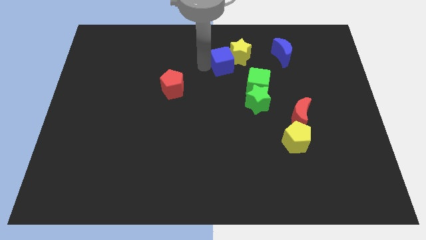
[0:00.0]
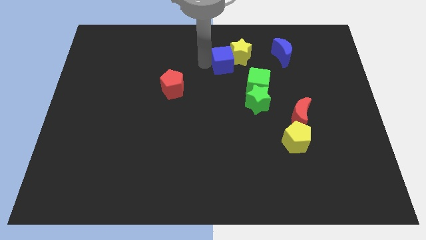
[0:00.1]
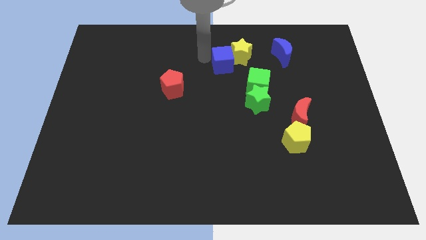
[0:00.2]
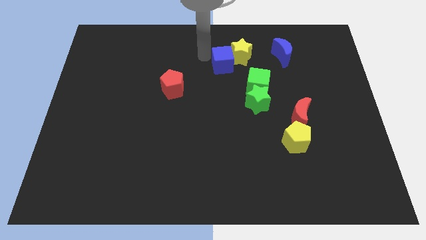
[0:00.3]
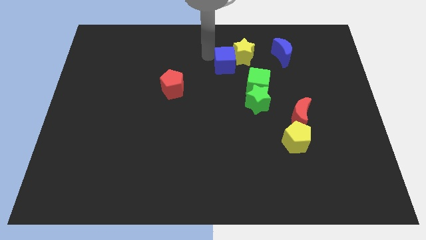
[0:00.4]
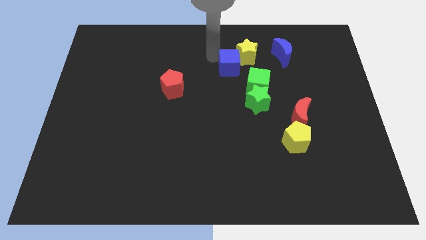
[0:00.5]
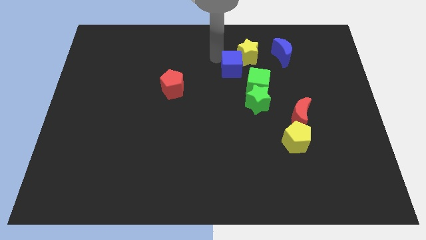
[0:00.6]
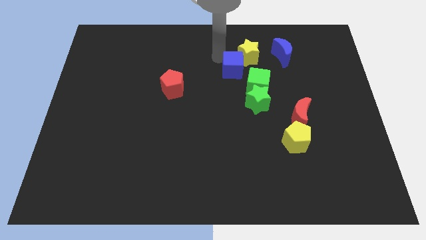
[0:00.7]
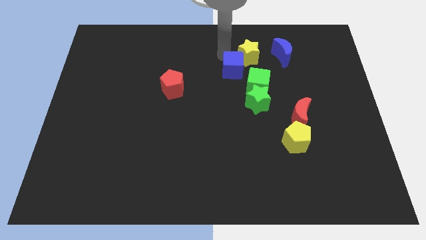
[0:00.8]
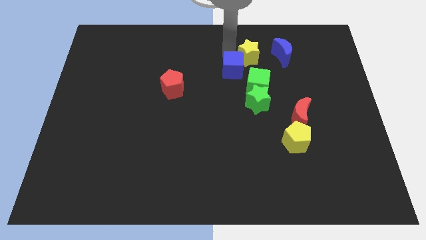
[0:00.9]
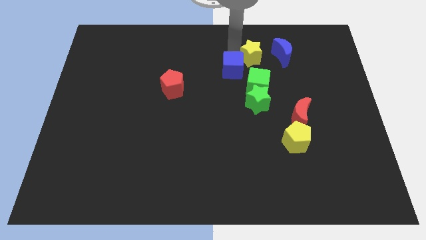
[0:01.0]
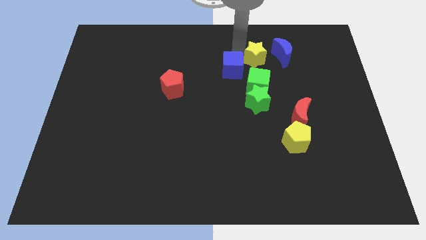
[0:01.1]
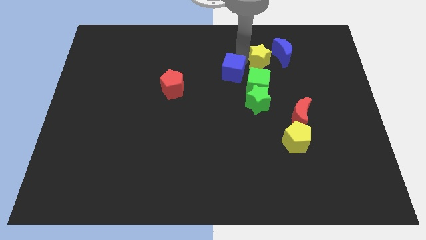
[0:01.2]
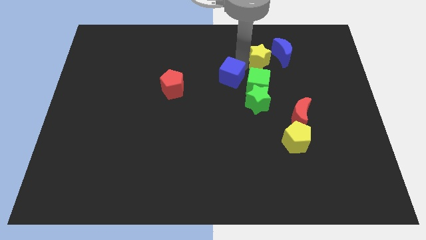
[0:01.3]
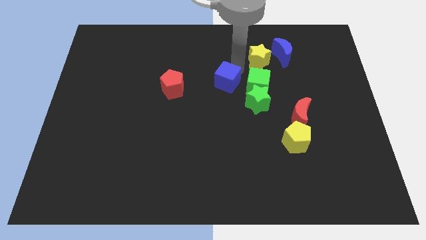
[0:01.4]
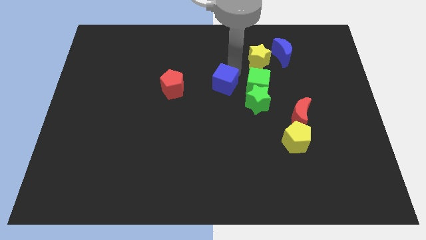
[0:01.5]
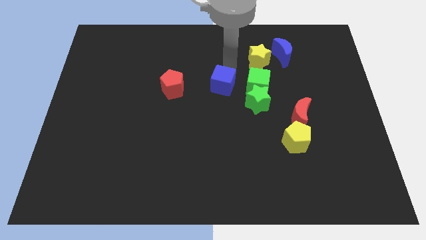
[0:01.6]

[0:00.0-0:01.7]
separate the blue cube from the yellow star

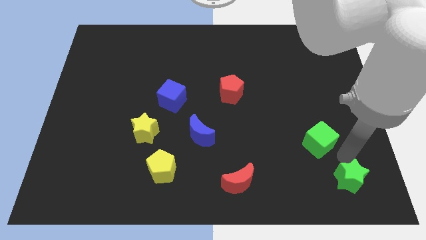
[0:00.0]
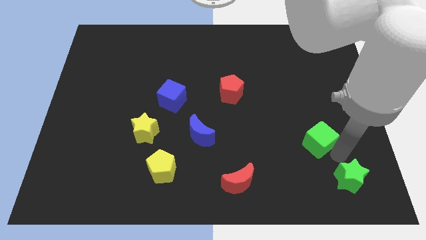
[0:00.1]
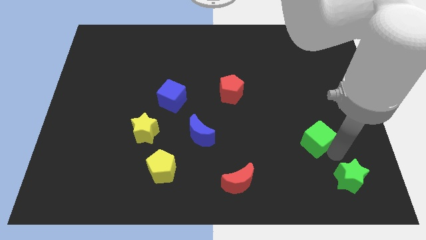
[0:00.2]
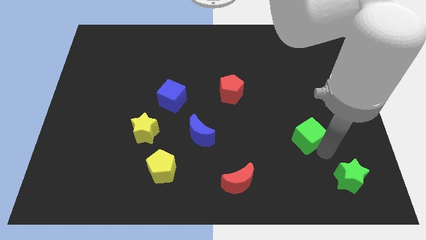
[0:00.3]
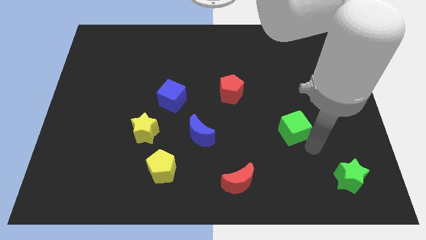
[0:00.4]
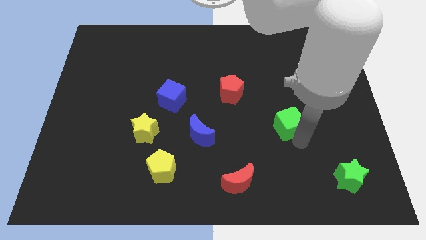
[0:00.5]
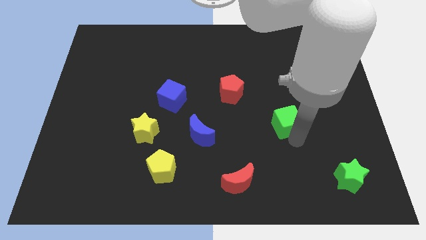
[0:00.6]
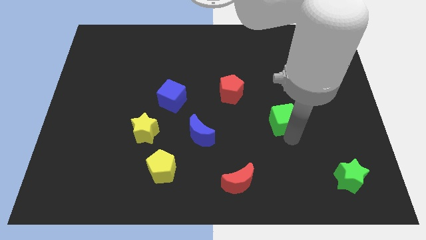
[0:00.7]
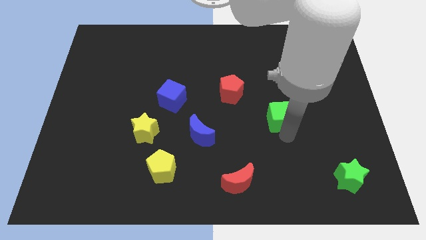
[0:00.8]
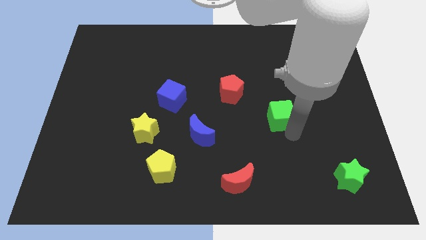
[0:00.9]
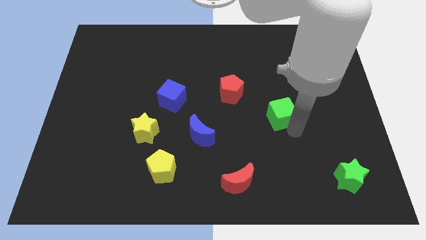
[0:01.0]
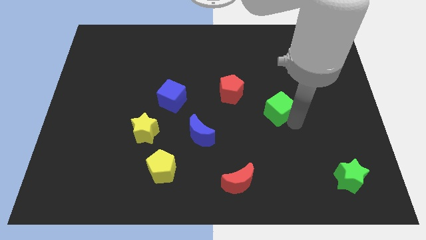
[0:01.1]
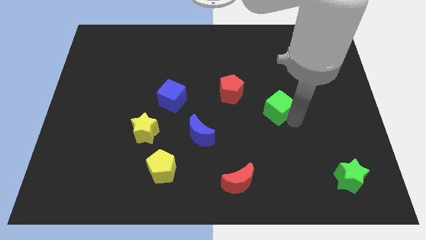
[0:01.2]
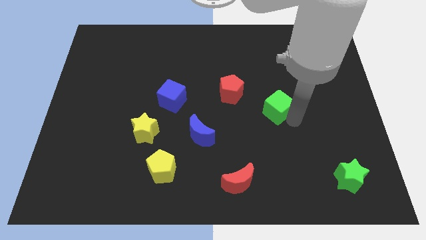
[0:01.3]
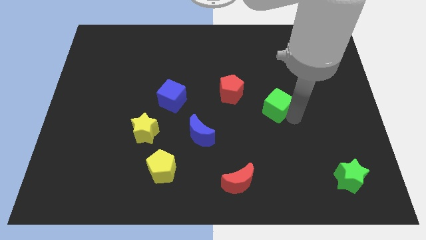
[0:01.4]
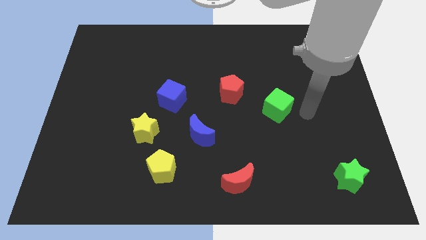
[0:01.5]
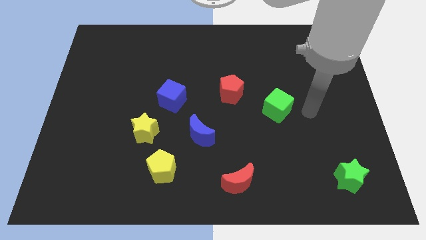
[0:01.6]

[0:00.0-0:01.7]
put the green cube diagonal to the red crescent

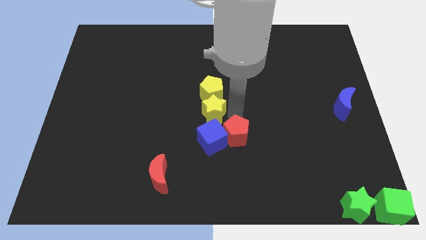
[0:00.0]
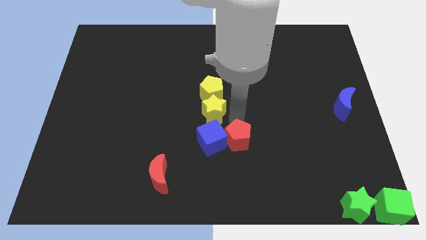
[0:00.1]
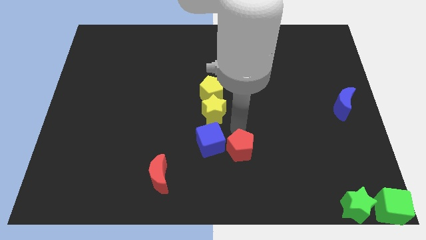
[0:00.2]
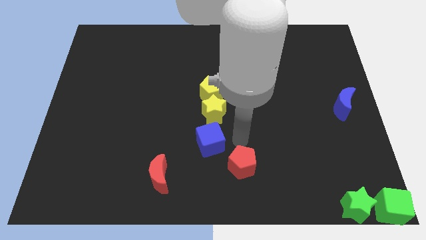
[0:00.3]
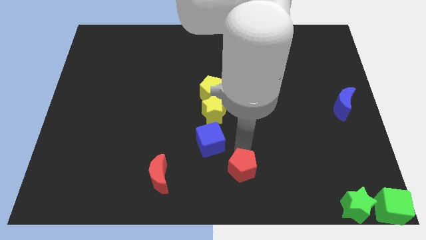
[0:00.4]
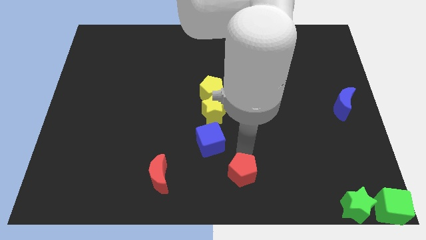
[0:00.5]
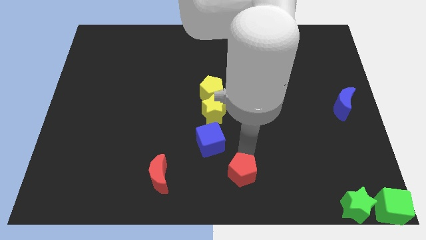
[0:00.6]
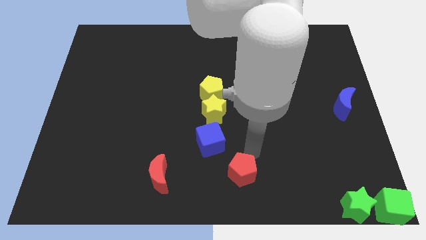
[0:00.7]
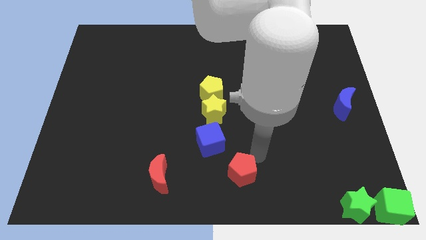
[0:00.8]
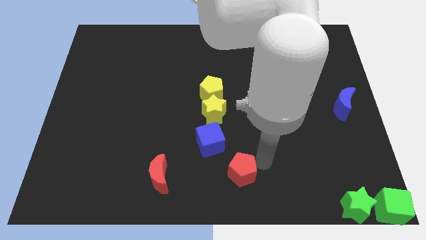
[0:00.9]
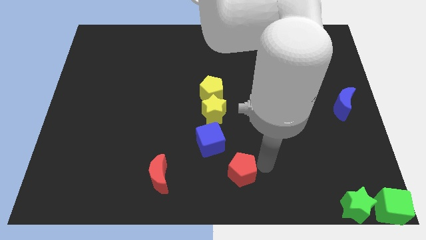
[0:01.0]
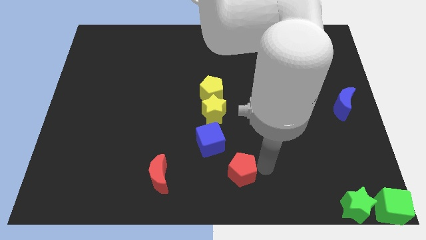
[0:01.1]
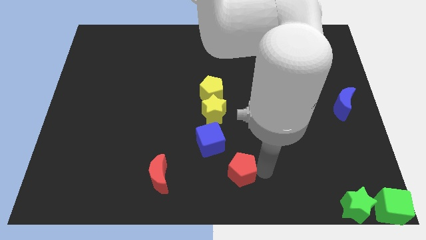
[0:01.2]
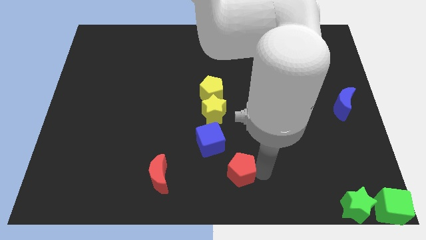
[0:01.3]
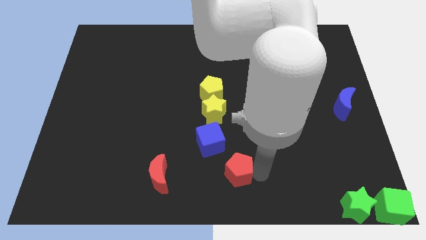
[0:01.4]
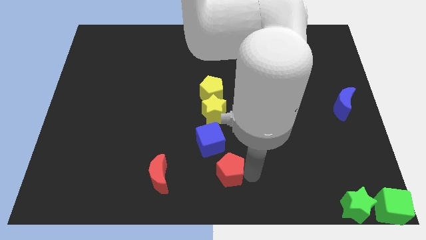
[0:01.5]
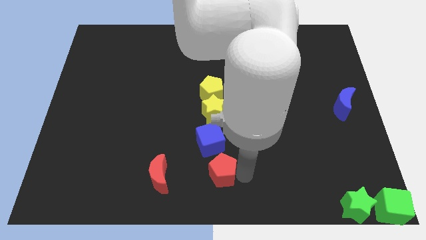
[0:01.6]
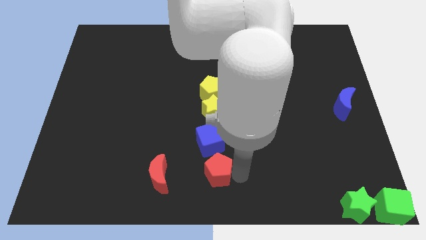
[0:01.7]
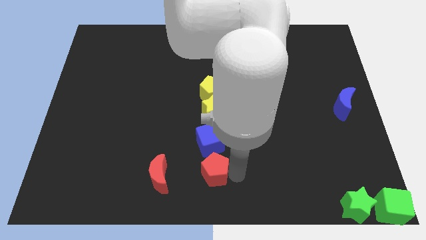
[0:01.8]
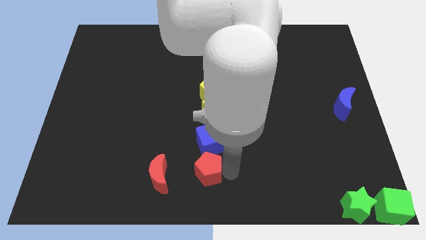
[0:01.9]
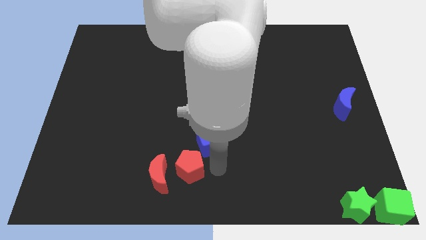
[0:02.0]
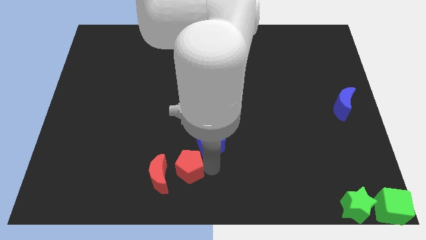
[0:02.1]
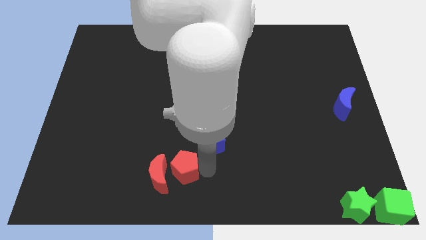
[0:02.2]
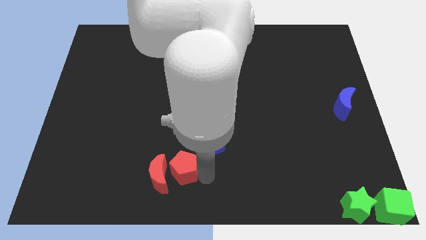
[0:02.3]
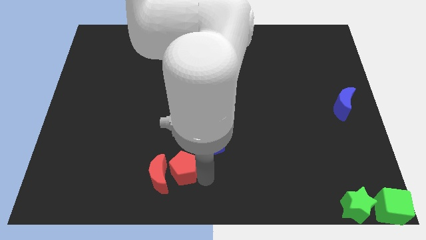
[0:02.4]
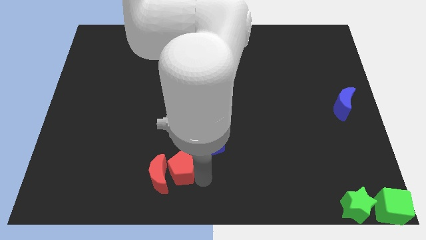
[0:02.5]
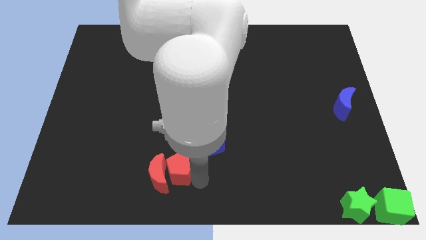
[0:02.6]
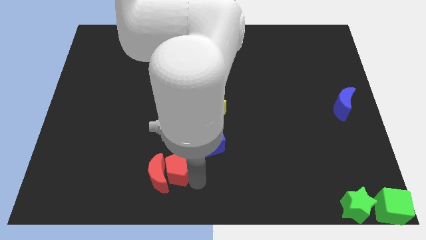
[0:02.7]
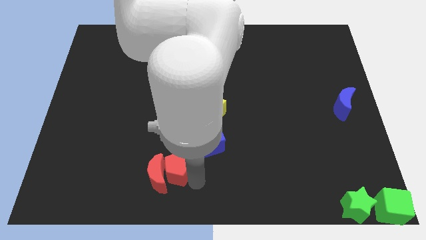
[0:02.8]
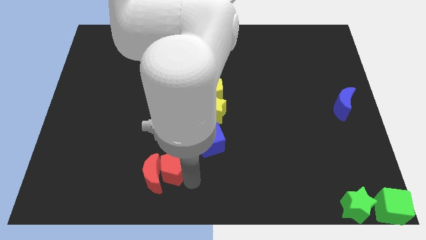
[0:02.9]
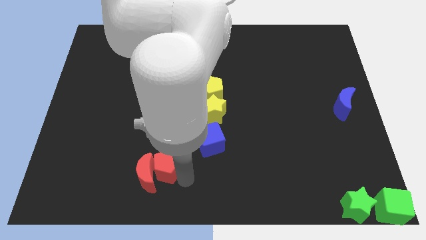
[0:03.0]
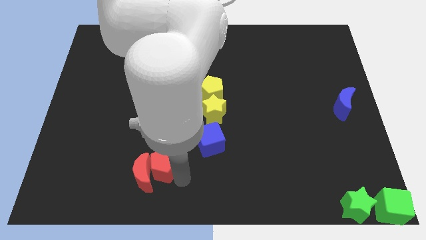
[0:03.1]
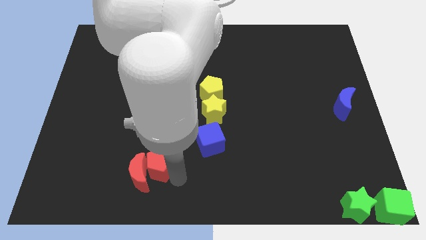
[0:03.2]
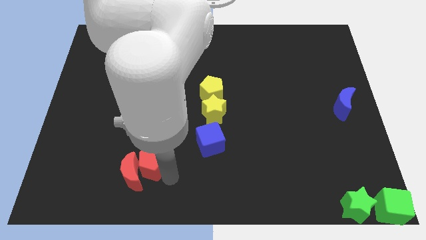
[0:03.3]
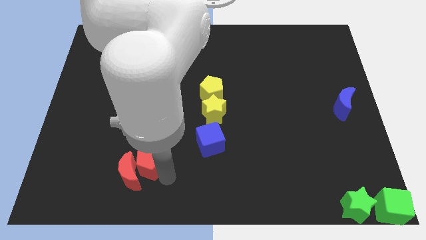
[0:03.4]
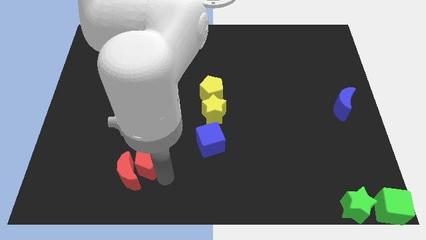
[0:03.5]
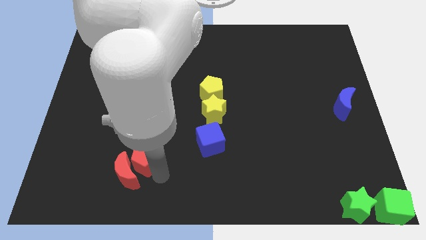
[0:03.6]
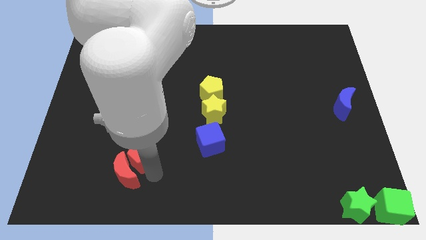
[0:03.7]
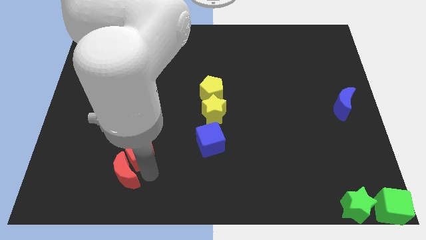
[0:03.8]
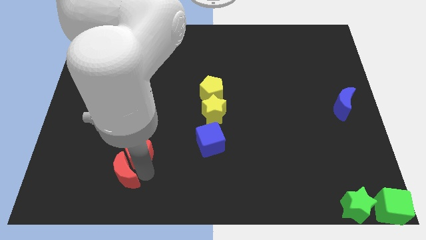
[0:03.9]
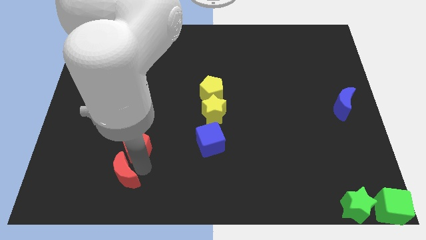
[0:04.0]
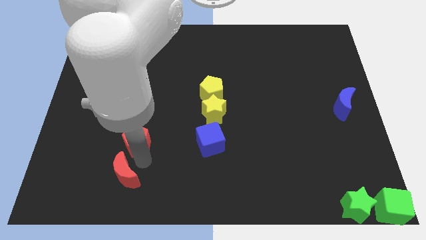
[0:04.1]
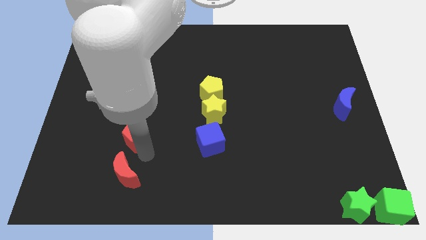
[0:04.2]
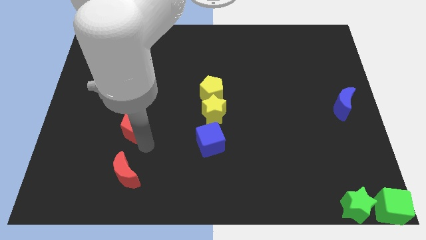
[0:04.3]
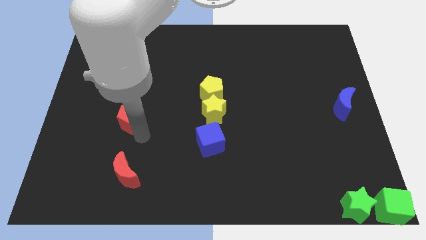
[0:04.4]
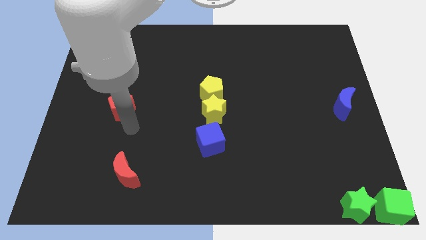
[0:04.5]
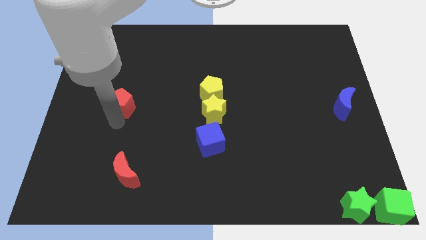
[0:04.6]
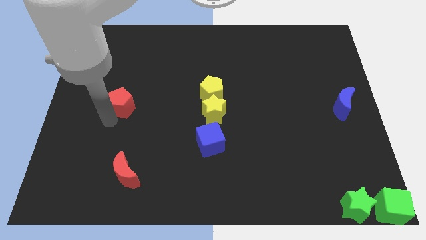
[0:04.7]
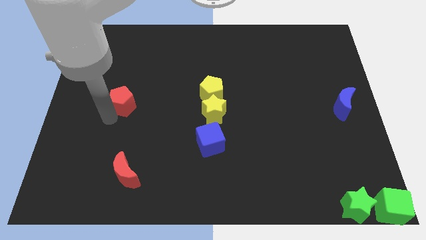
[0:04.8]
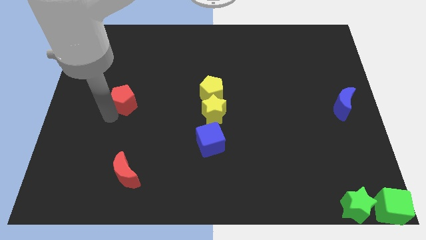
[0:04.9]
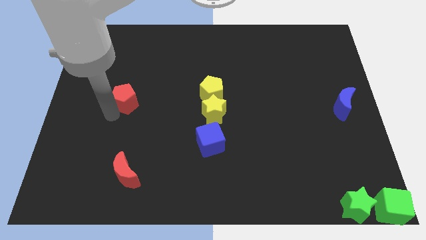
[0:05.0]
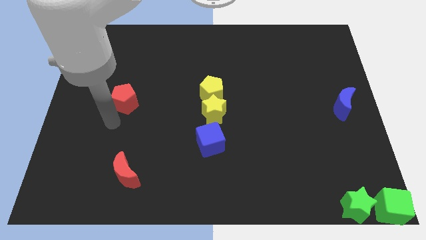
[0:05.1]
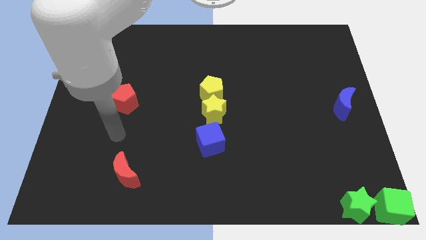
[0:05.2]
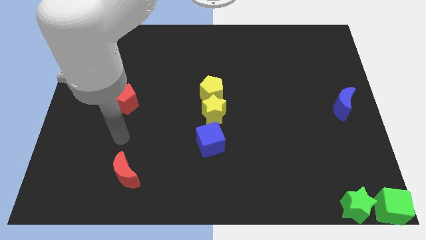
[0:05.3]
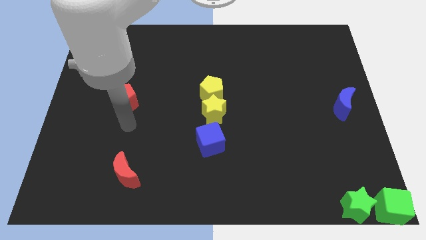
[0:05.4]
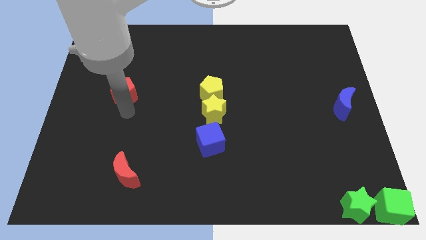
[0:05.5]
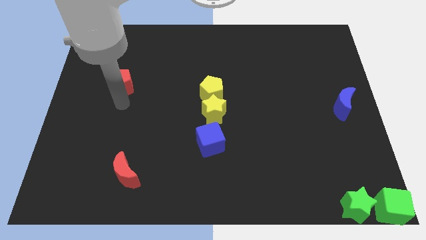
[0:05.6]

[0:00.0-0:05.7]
place the red pentagon to the left of the yellow pentagon
